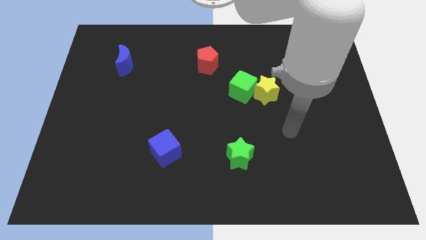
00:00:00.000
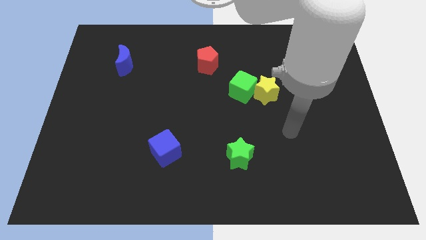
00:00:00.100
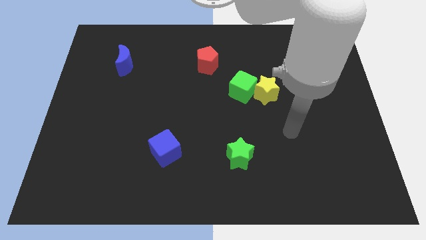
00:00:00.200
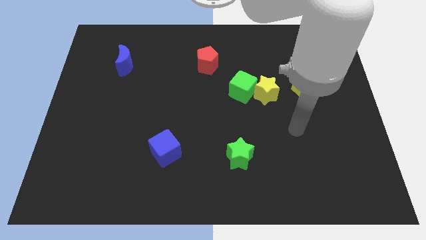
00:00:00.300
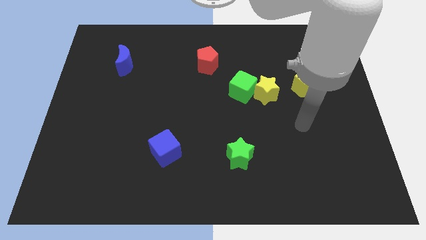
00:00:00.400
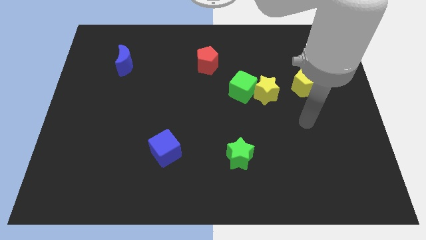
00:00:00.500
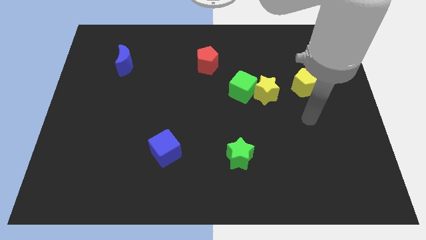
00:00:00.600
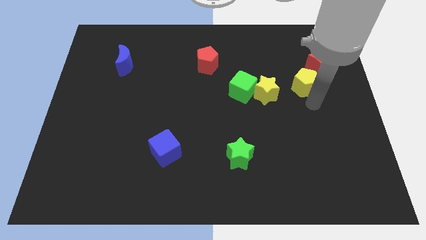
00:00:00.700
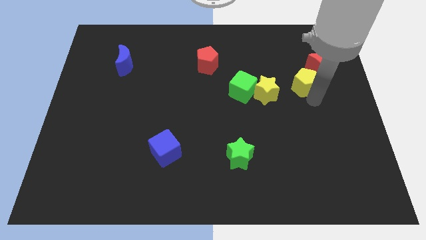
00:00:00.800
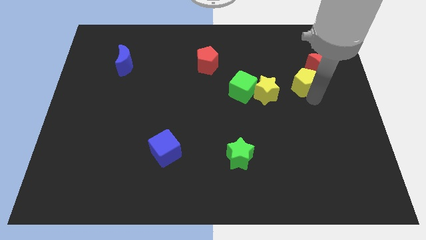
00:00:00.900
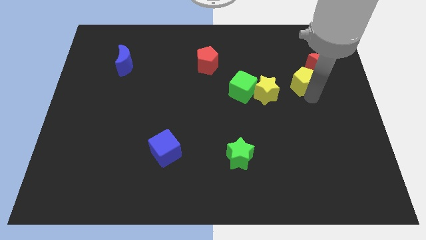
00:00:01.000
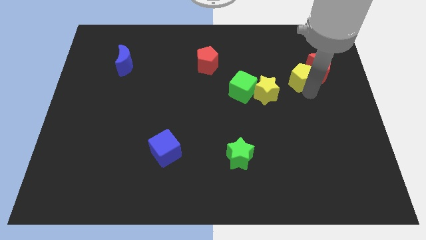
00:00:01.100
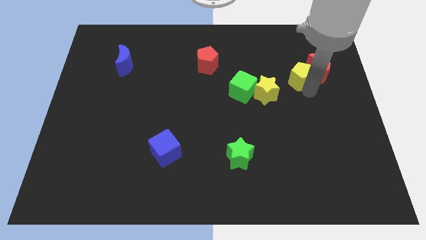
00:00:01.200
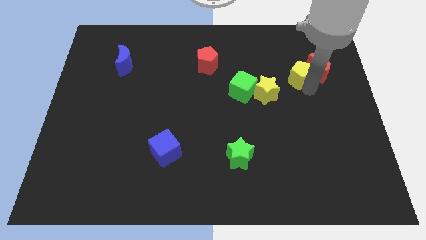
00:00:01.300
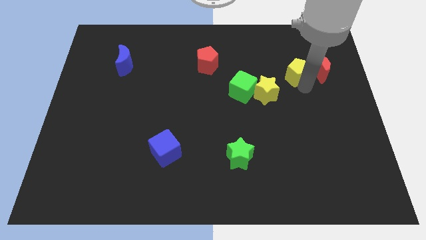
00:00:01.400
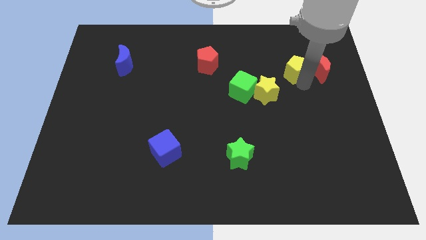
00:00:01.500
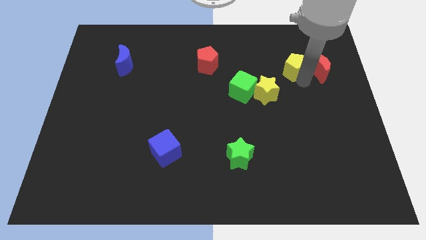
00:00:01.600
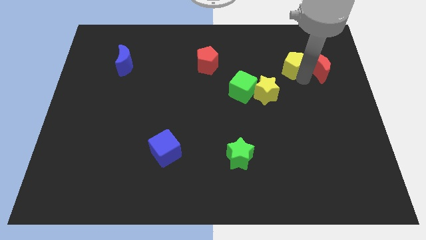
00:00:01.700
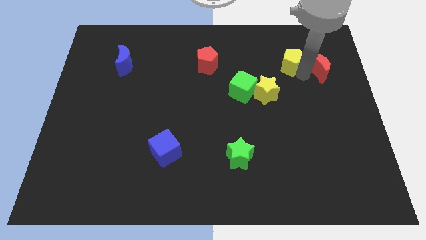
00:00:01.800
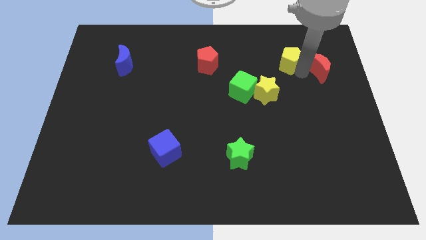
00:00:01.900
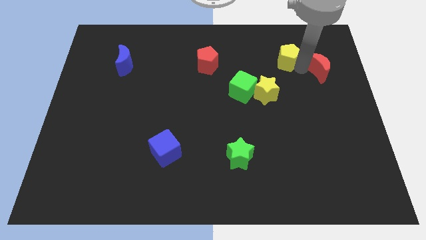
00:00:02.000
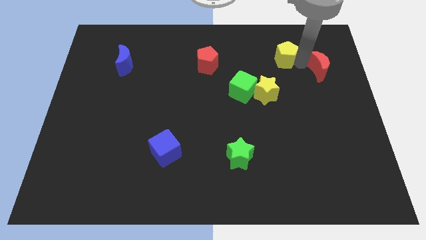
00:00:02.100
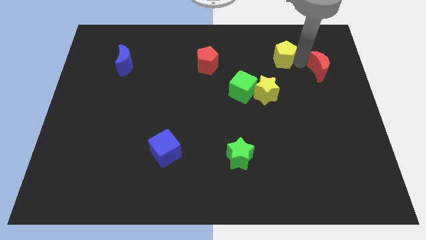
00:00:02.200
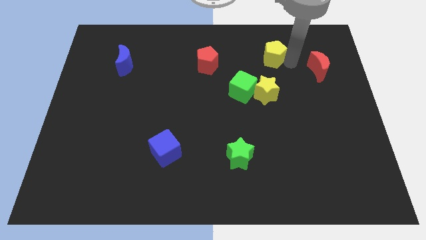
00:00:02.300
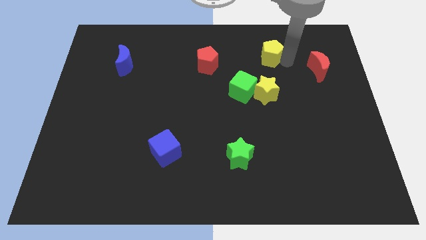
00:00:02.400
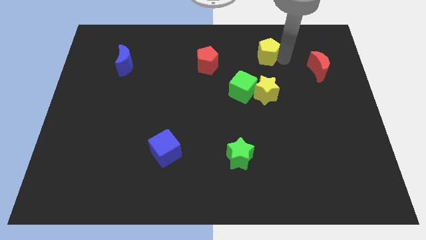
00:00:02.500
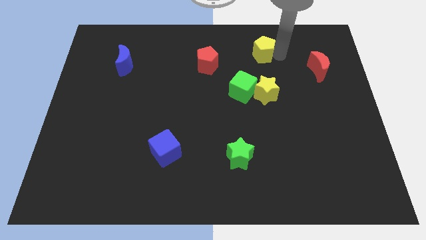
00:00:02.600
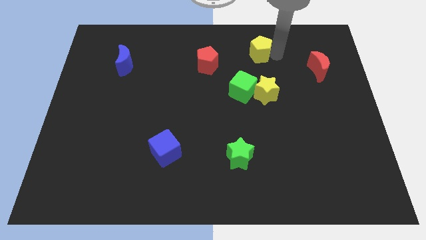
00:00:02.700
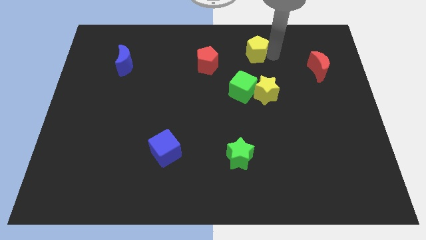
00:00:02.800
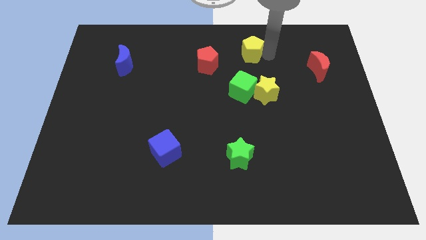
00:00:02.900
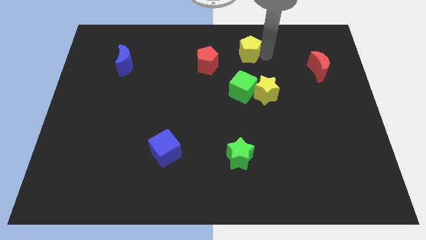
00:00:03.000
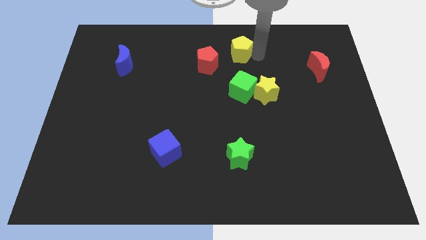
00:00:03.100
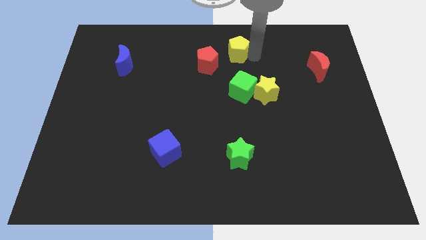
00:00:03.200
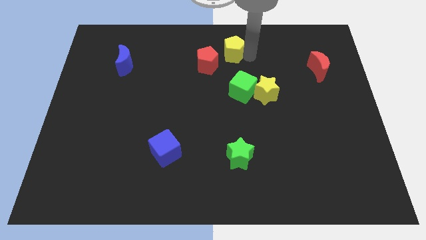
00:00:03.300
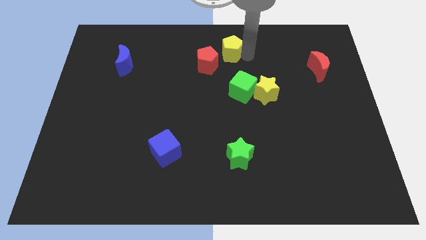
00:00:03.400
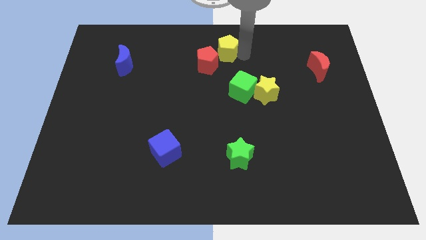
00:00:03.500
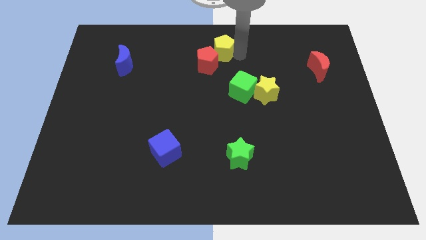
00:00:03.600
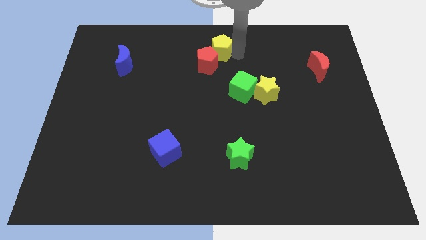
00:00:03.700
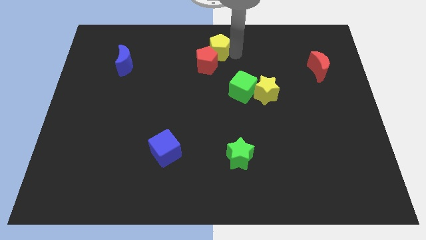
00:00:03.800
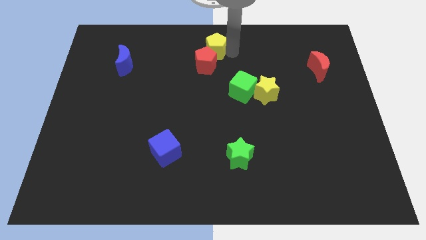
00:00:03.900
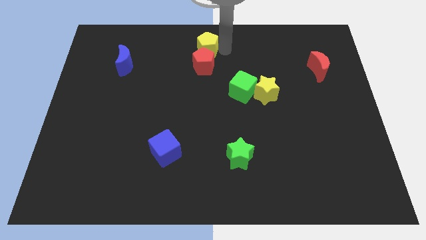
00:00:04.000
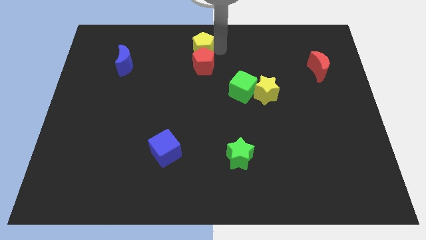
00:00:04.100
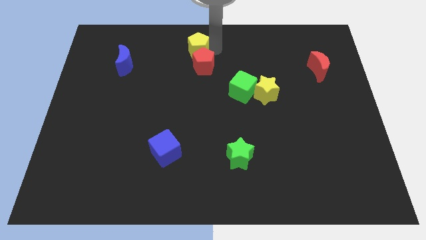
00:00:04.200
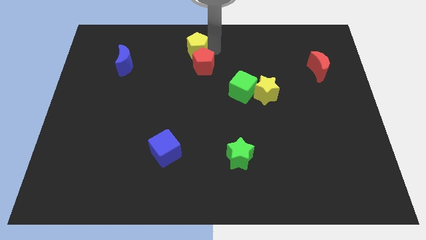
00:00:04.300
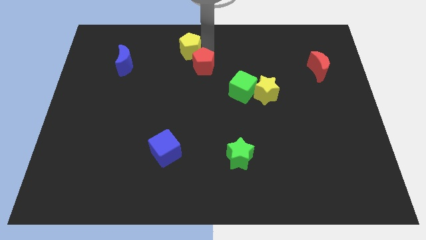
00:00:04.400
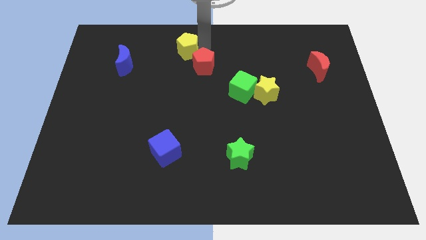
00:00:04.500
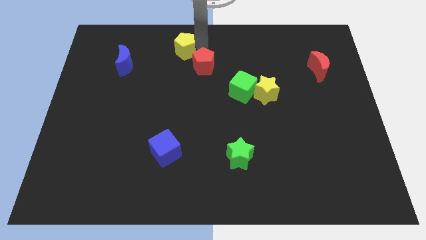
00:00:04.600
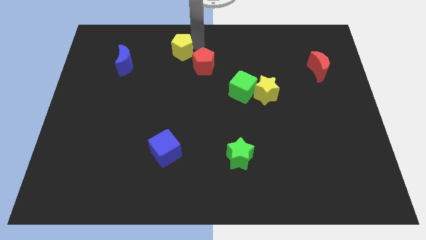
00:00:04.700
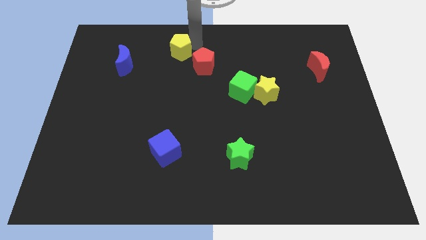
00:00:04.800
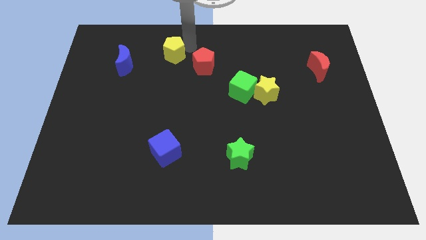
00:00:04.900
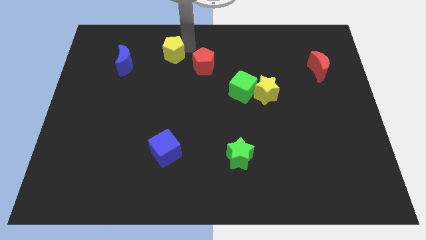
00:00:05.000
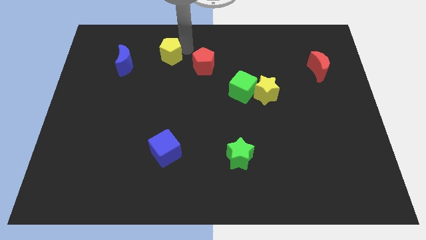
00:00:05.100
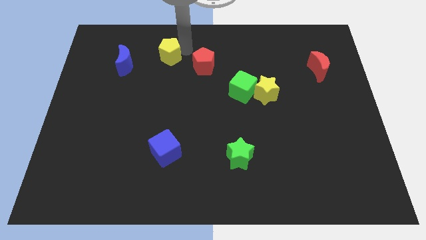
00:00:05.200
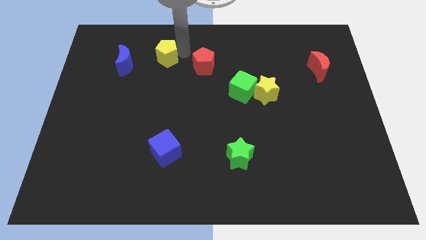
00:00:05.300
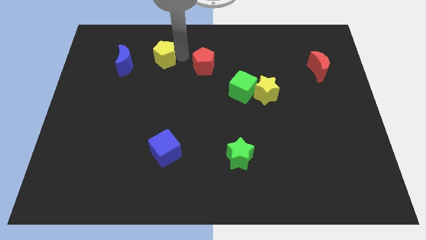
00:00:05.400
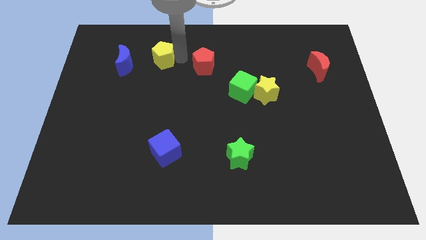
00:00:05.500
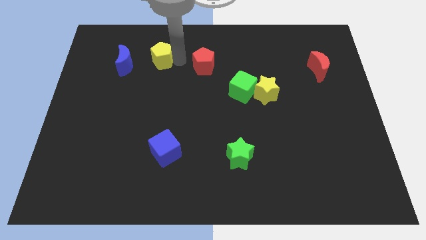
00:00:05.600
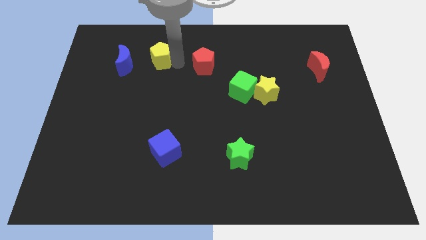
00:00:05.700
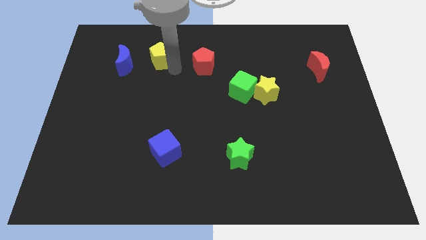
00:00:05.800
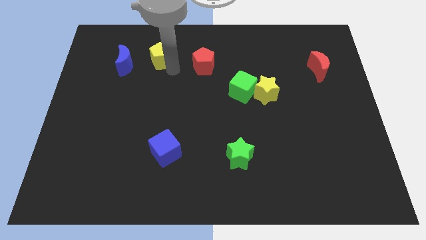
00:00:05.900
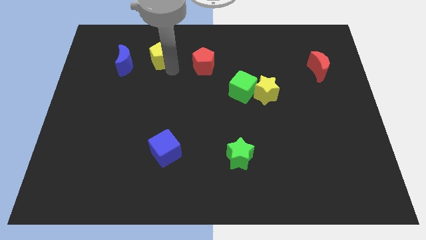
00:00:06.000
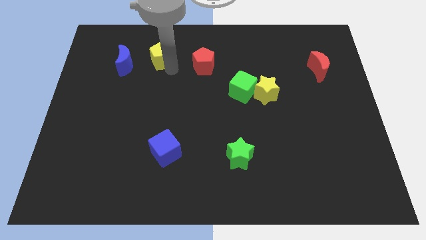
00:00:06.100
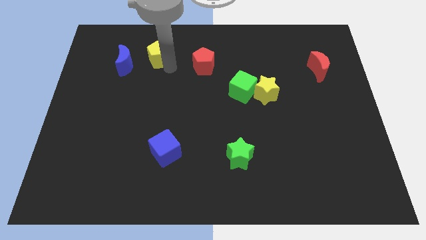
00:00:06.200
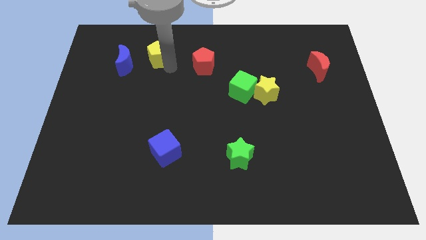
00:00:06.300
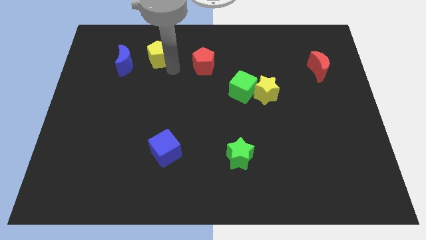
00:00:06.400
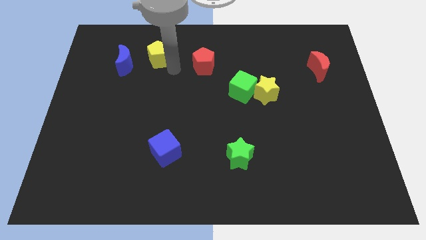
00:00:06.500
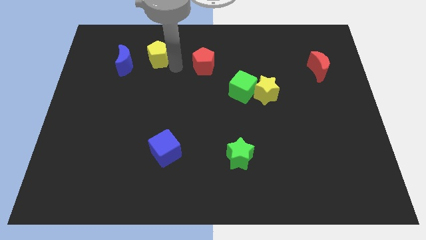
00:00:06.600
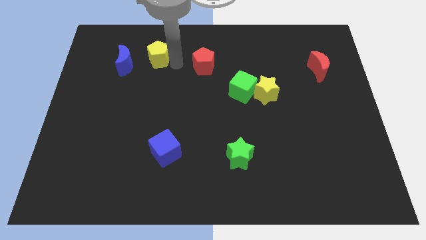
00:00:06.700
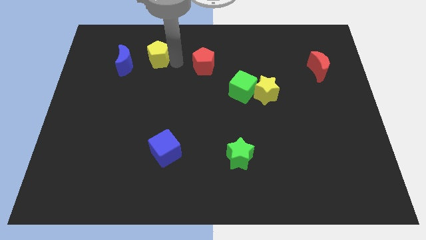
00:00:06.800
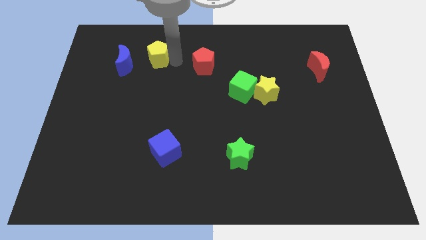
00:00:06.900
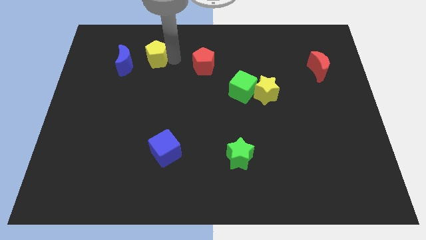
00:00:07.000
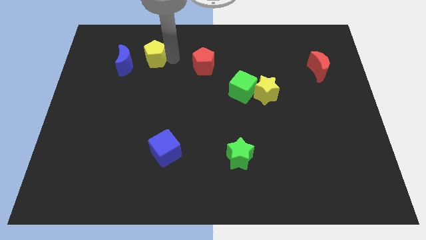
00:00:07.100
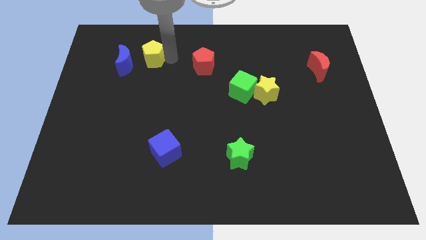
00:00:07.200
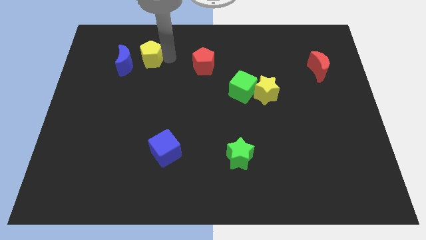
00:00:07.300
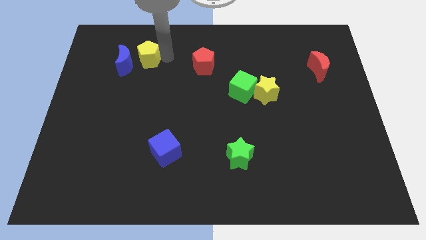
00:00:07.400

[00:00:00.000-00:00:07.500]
push the yellow pentagon next to the blue moon

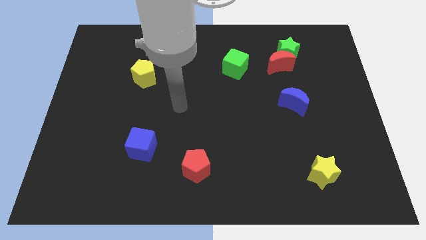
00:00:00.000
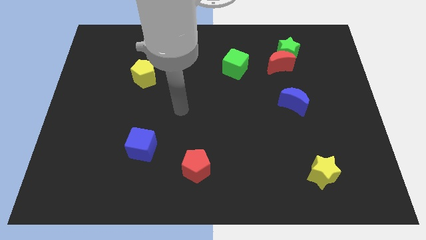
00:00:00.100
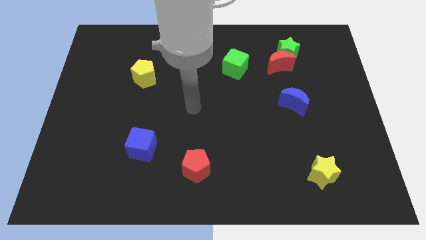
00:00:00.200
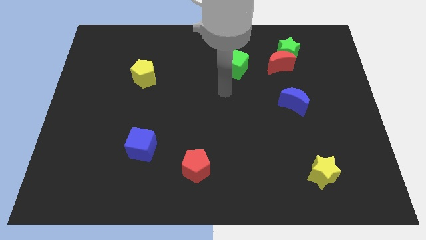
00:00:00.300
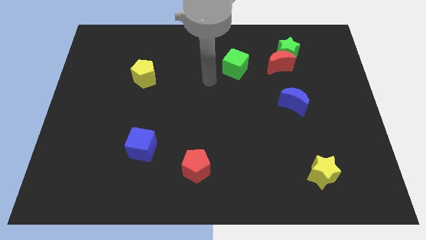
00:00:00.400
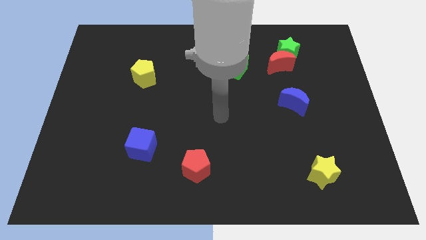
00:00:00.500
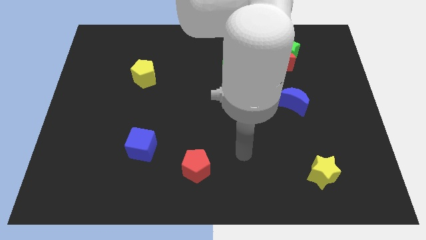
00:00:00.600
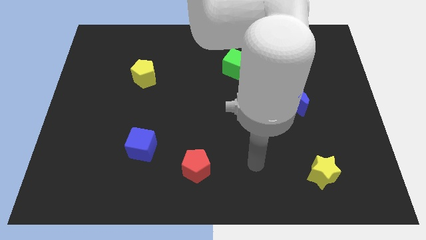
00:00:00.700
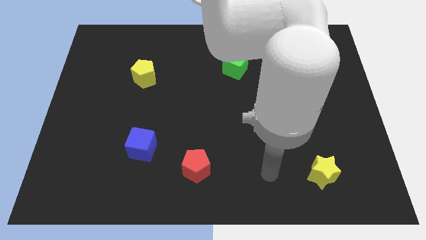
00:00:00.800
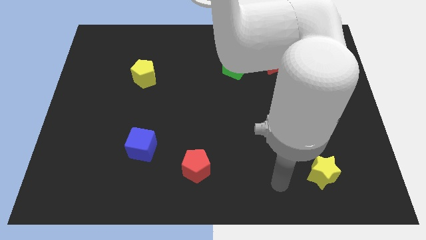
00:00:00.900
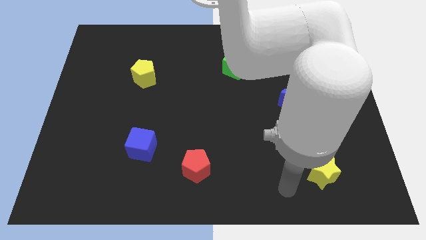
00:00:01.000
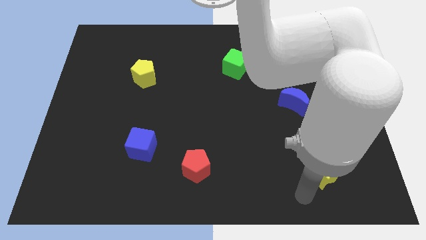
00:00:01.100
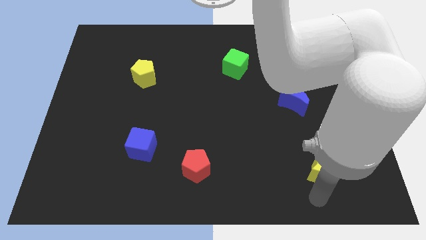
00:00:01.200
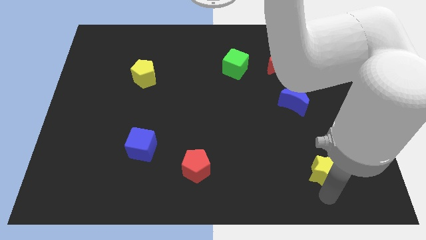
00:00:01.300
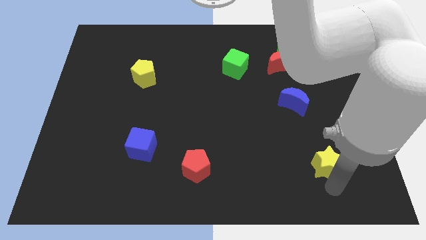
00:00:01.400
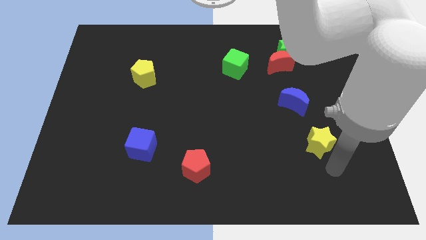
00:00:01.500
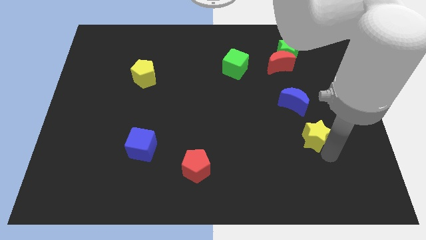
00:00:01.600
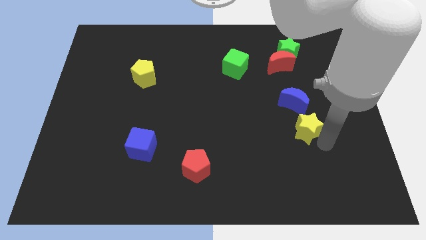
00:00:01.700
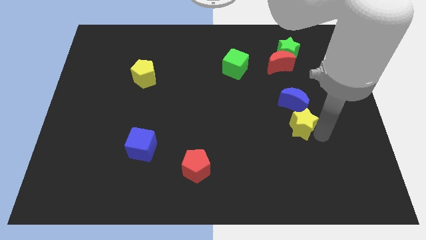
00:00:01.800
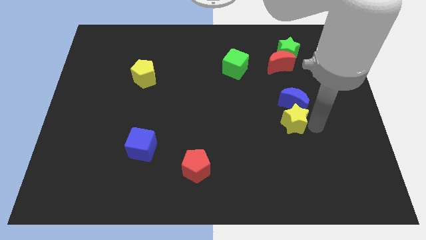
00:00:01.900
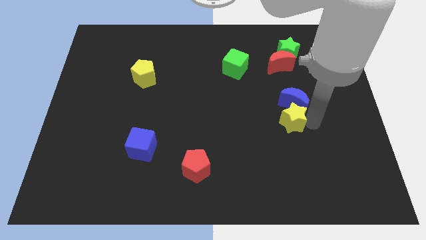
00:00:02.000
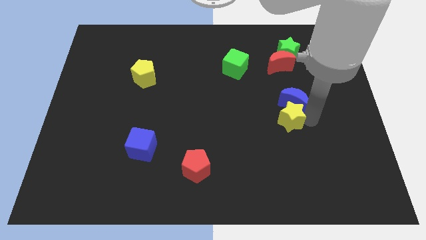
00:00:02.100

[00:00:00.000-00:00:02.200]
move the yellow star close to the blue moon
